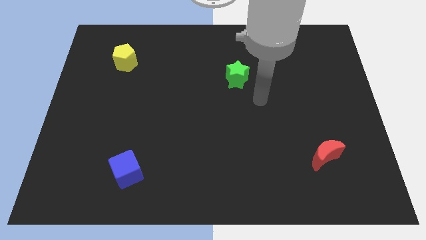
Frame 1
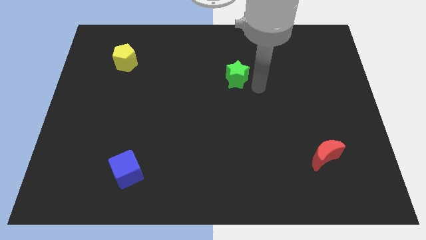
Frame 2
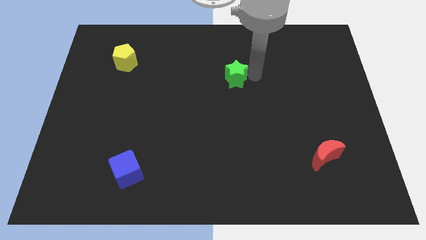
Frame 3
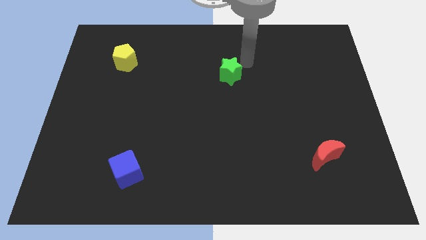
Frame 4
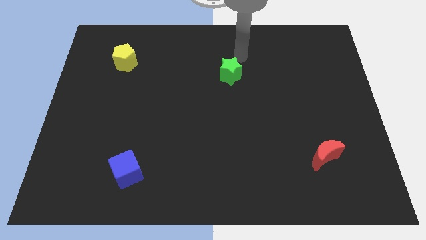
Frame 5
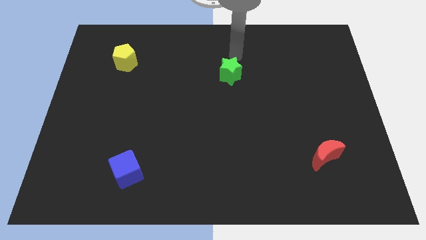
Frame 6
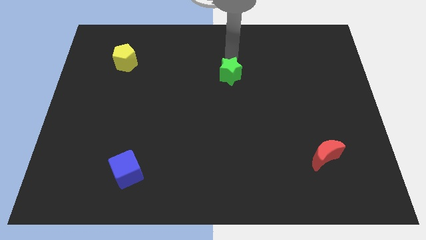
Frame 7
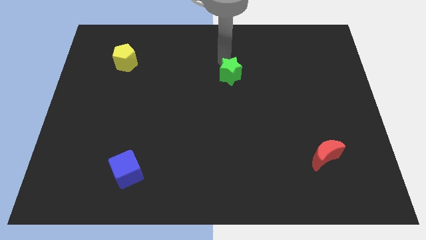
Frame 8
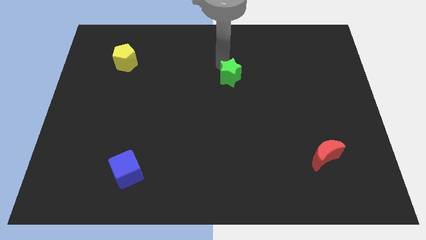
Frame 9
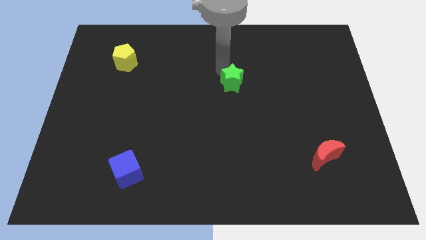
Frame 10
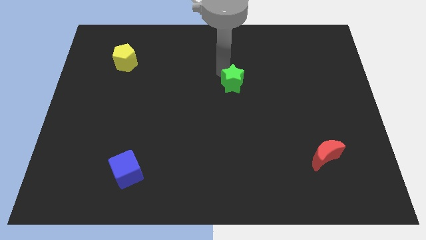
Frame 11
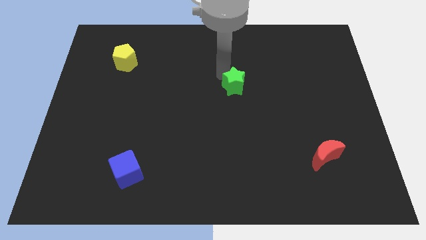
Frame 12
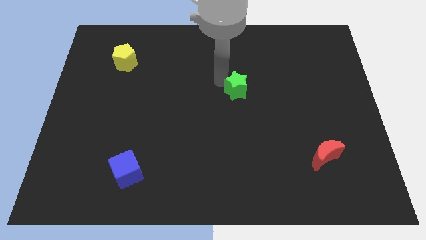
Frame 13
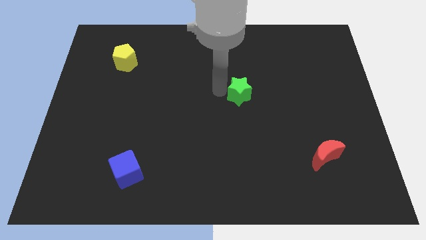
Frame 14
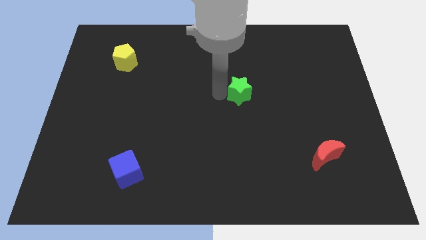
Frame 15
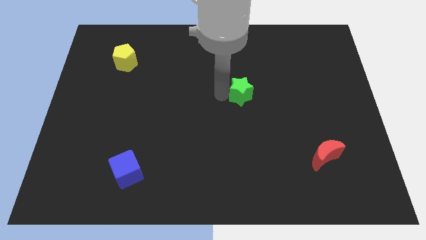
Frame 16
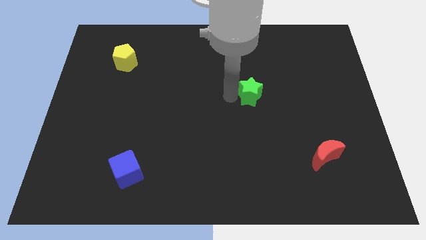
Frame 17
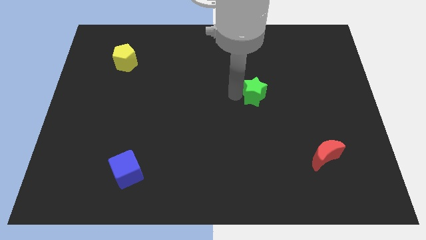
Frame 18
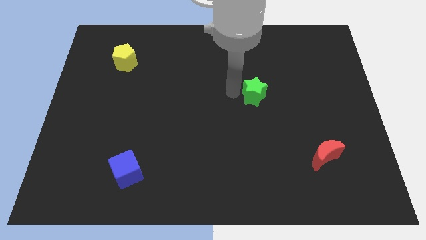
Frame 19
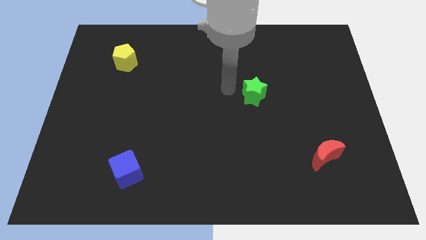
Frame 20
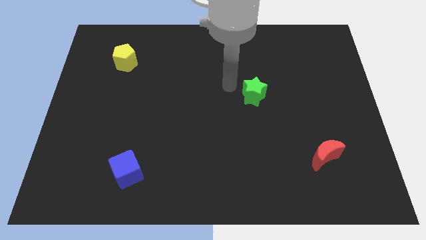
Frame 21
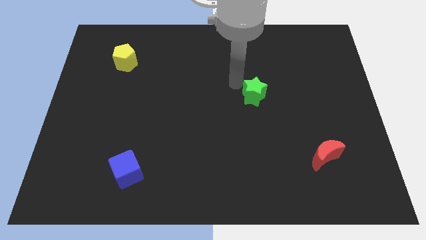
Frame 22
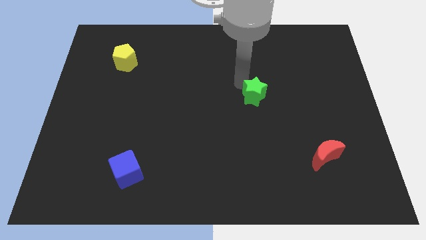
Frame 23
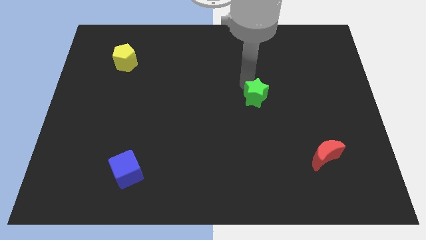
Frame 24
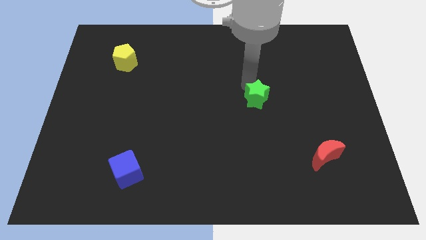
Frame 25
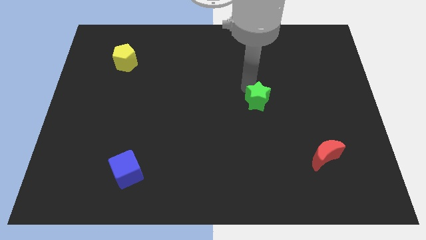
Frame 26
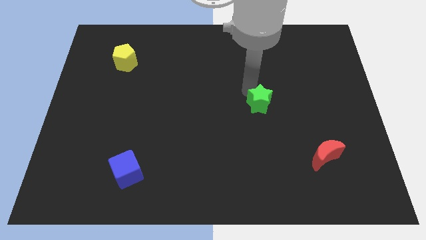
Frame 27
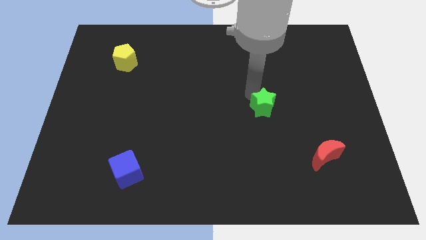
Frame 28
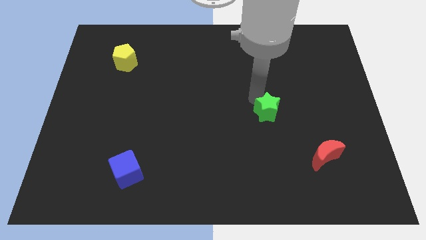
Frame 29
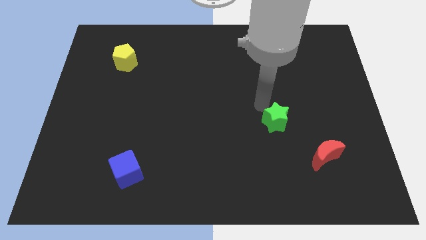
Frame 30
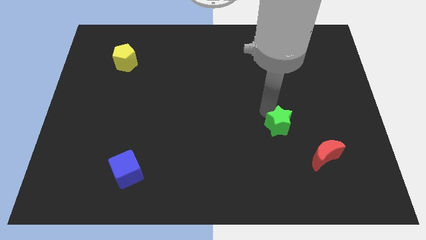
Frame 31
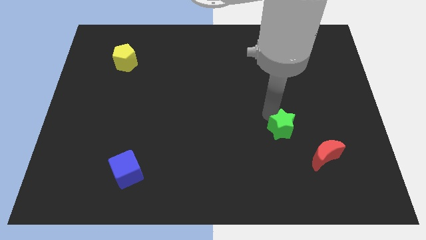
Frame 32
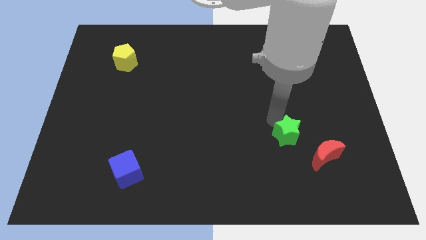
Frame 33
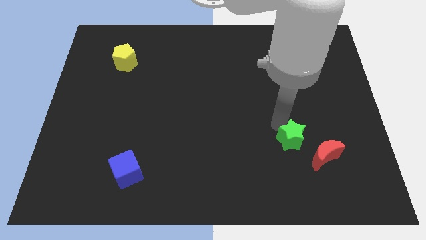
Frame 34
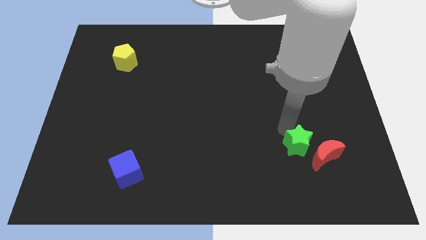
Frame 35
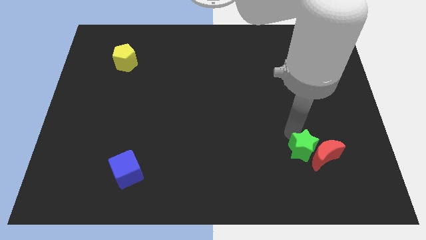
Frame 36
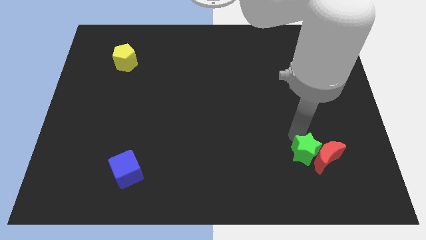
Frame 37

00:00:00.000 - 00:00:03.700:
push the green star next to the red block

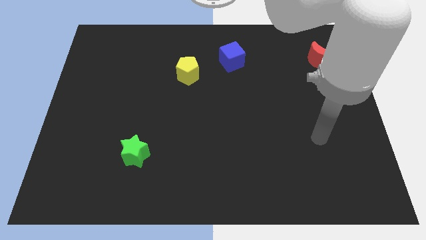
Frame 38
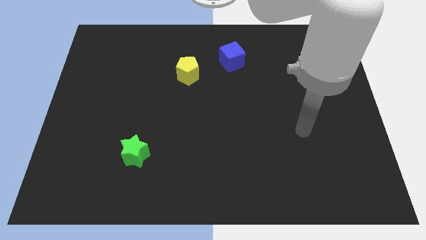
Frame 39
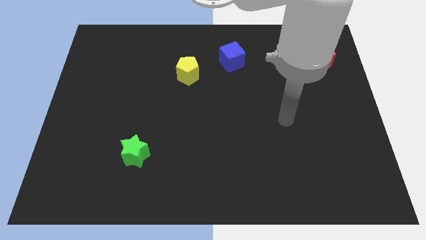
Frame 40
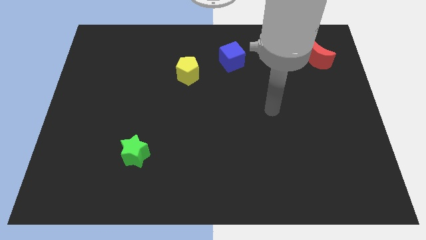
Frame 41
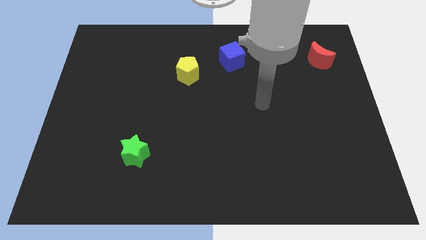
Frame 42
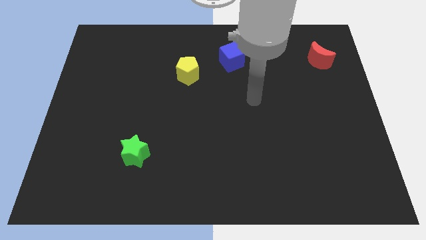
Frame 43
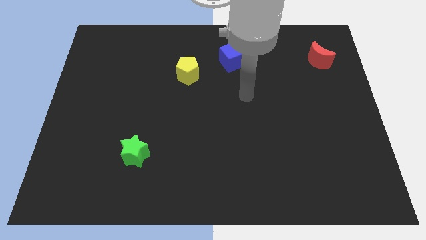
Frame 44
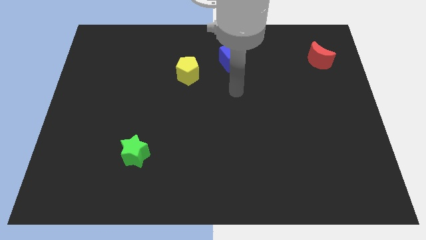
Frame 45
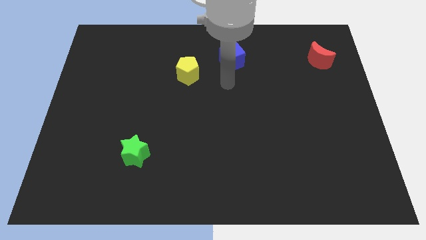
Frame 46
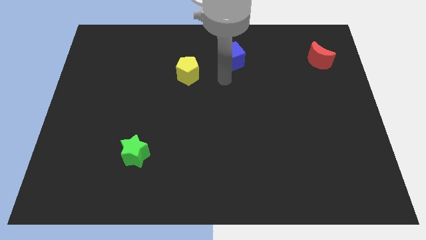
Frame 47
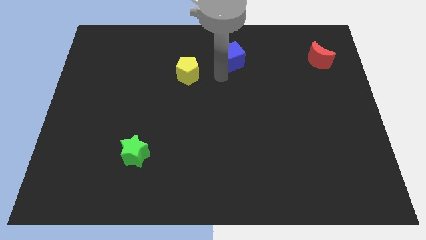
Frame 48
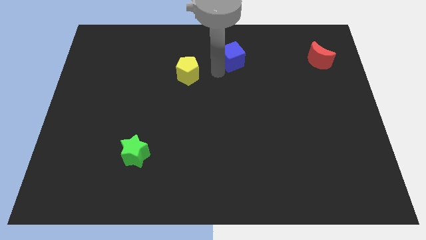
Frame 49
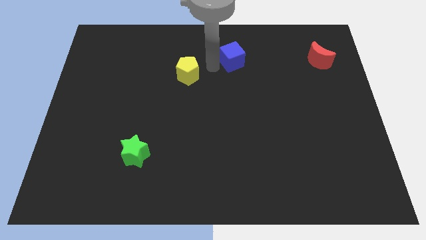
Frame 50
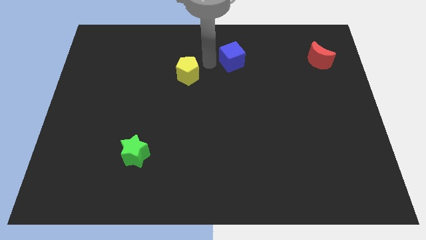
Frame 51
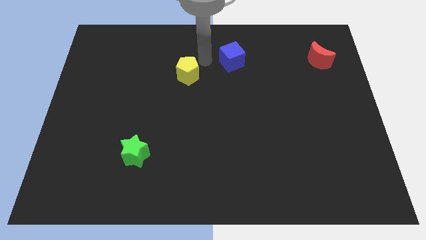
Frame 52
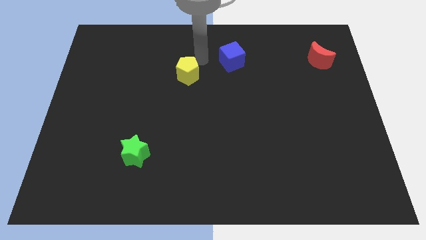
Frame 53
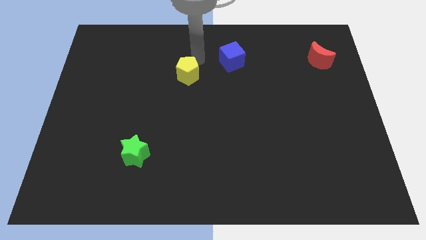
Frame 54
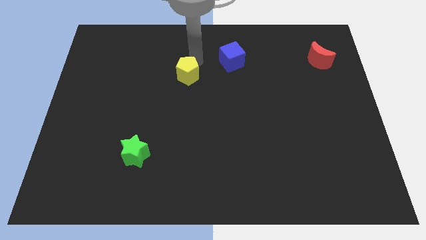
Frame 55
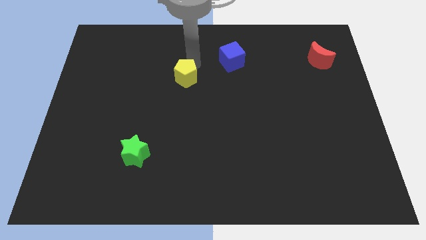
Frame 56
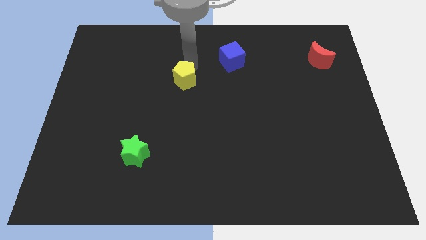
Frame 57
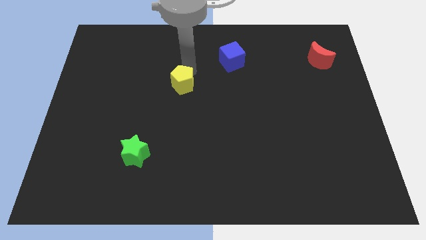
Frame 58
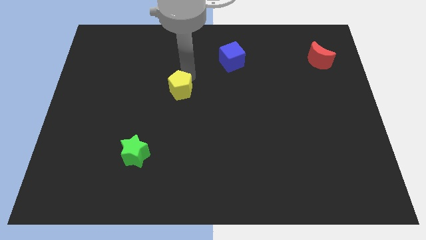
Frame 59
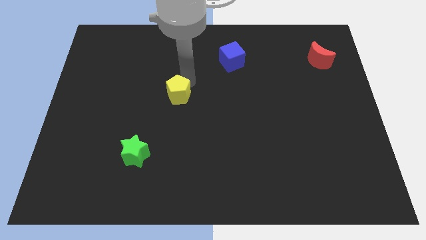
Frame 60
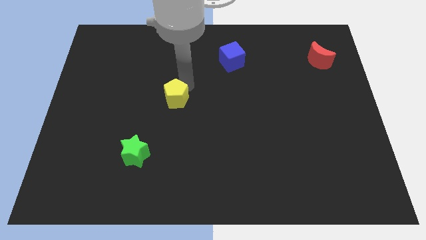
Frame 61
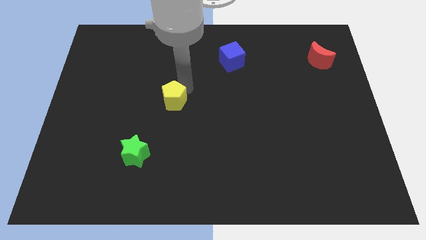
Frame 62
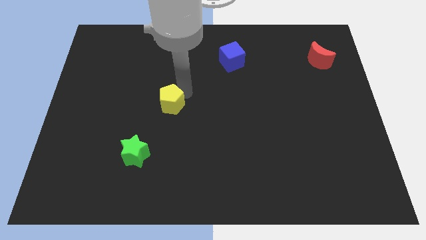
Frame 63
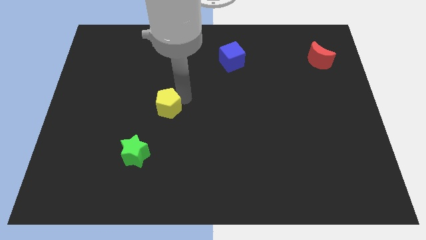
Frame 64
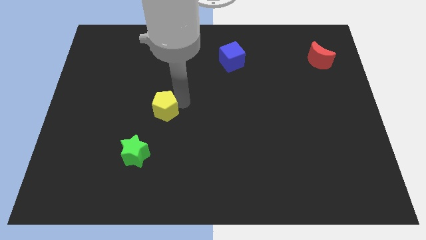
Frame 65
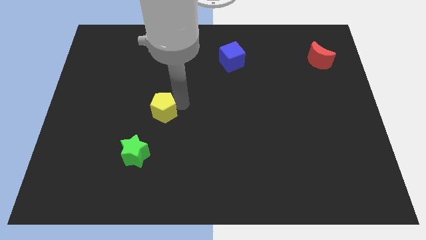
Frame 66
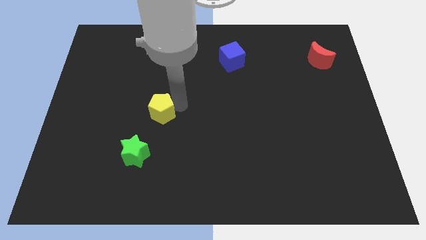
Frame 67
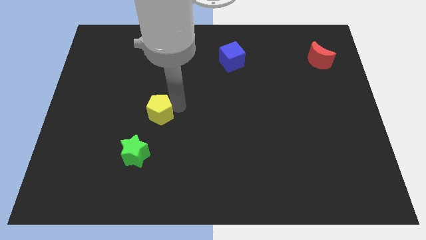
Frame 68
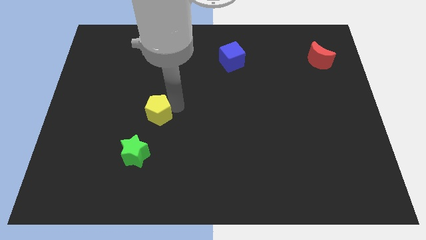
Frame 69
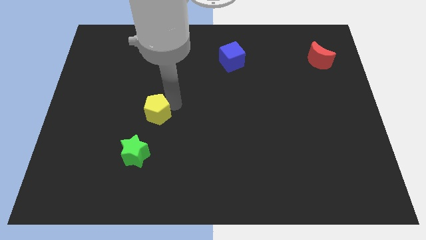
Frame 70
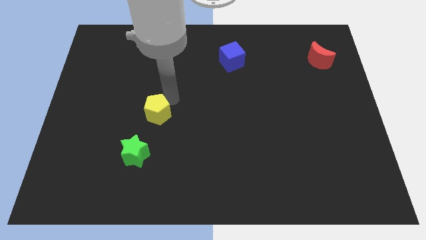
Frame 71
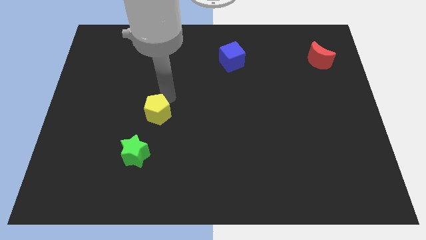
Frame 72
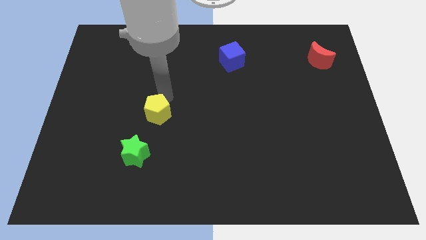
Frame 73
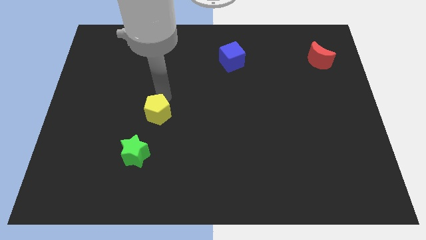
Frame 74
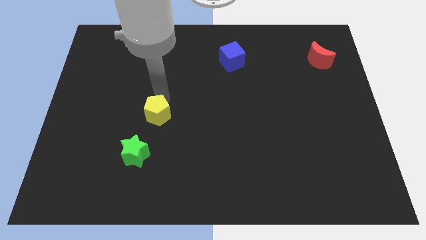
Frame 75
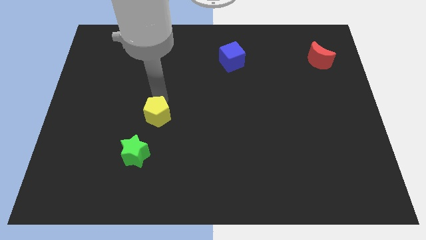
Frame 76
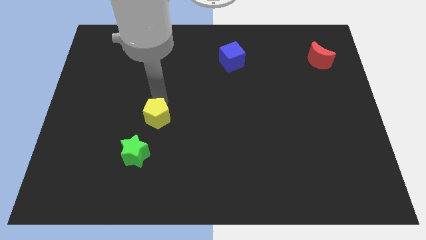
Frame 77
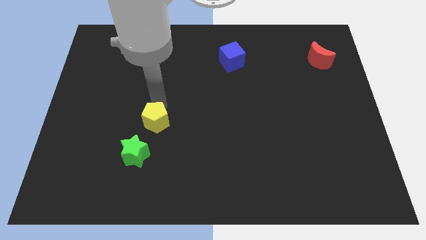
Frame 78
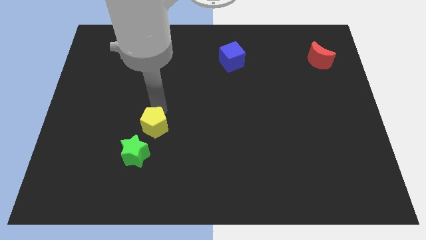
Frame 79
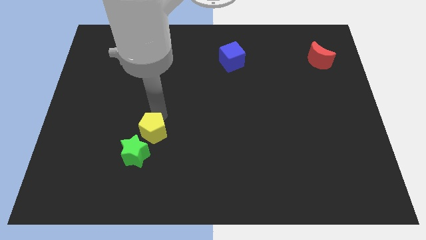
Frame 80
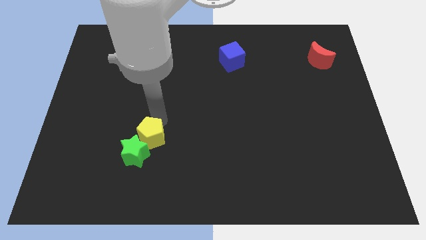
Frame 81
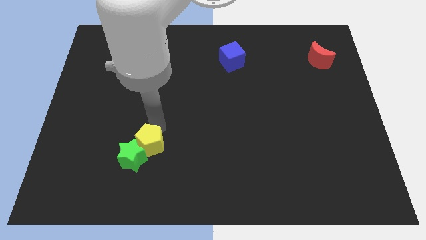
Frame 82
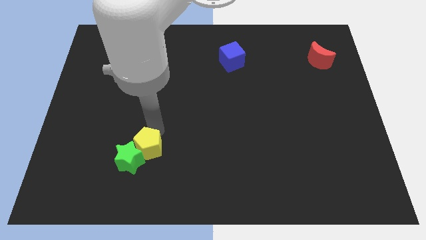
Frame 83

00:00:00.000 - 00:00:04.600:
put the yellow pentagon to the green block
